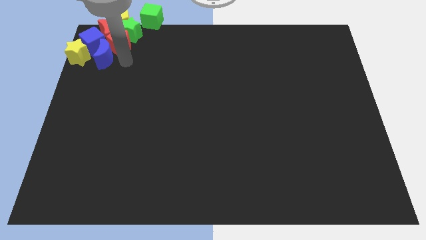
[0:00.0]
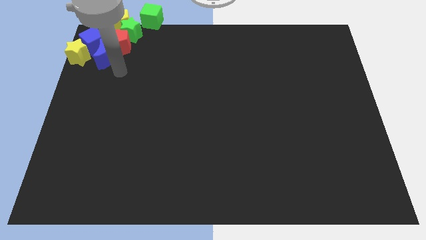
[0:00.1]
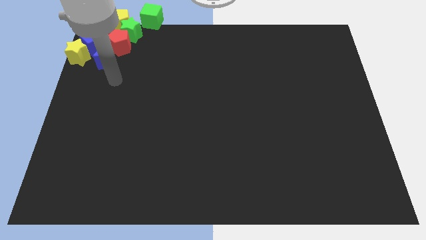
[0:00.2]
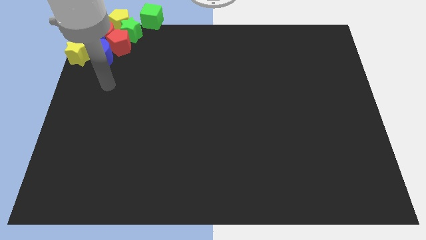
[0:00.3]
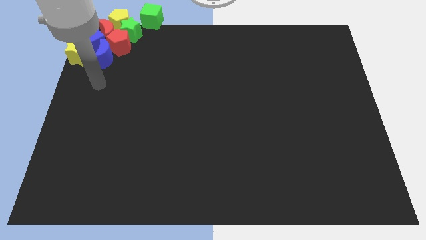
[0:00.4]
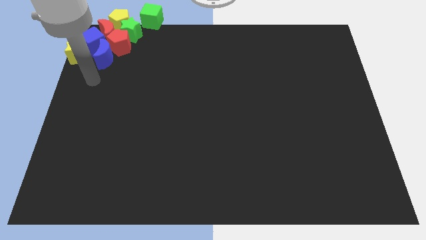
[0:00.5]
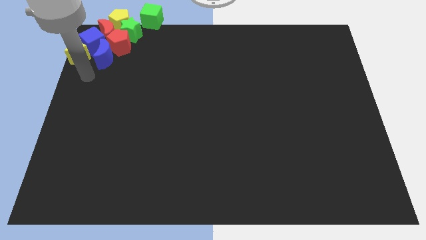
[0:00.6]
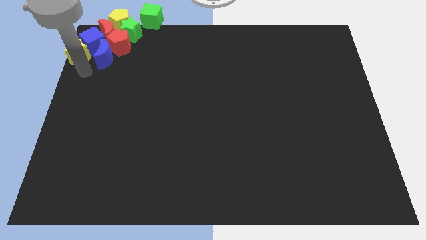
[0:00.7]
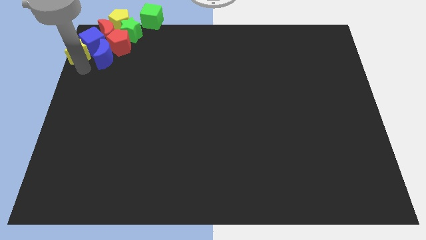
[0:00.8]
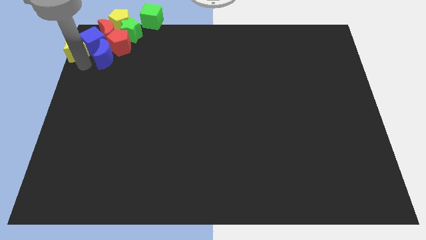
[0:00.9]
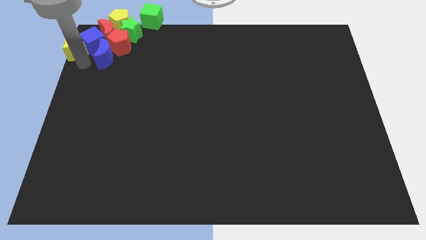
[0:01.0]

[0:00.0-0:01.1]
touch the bottom side of the yellow star

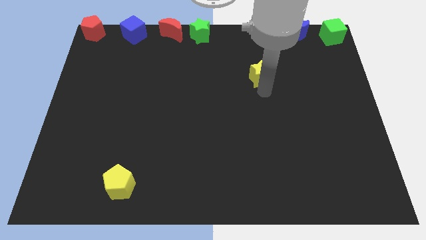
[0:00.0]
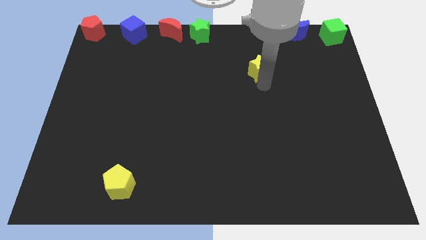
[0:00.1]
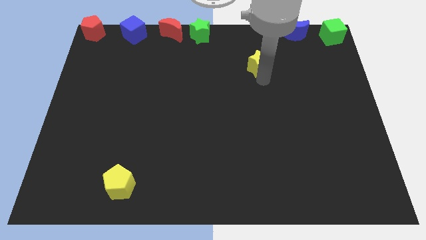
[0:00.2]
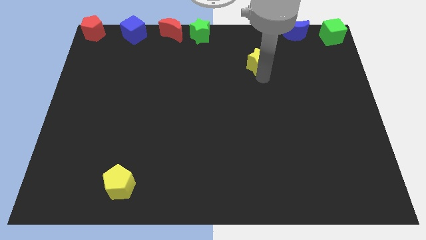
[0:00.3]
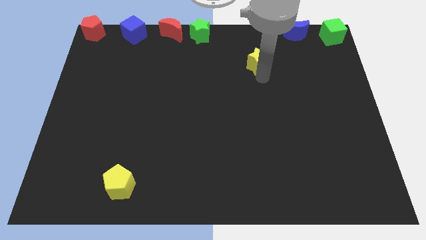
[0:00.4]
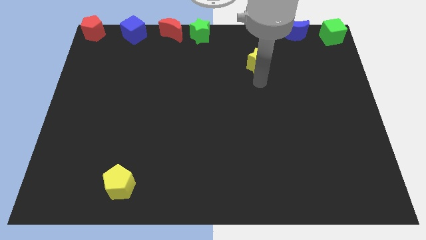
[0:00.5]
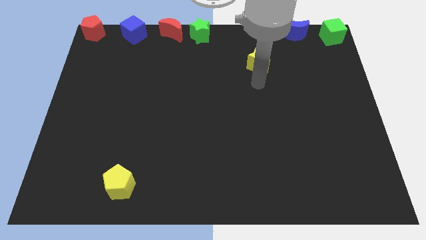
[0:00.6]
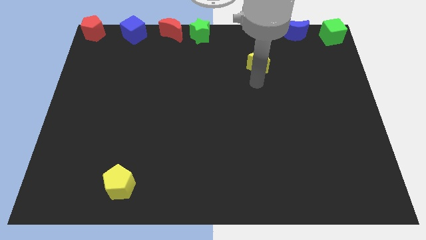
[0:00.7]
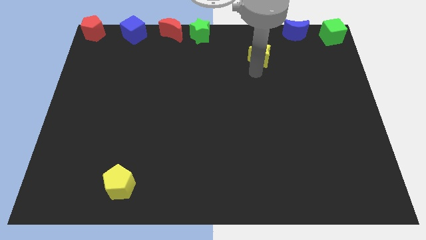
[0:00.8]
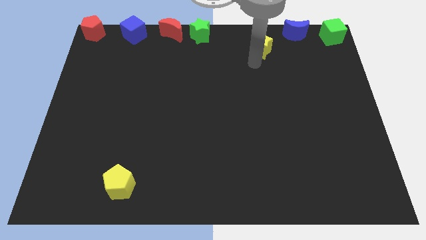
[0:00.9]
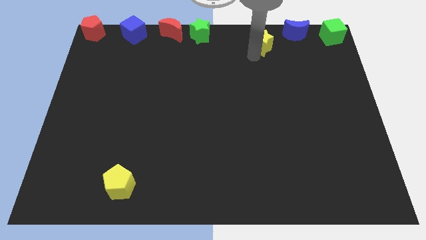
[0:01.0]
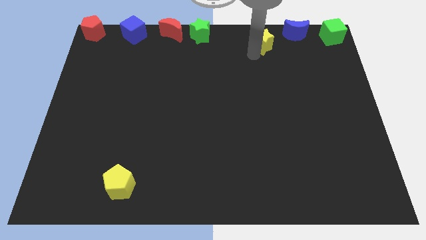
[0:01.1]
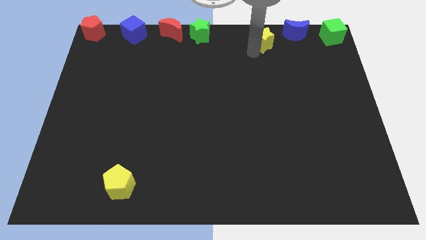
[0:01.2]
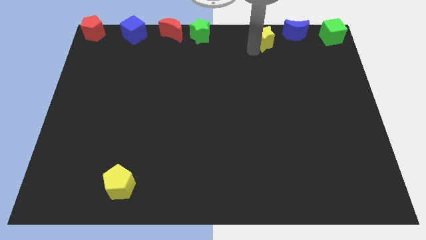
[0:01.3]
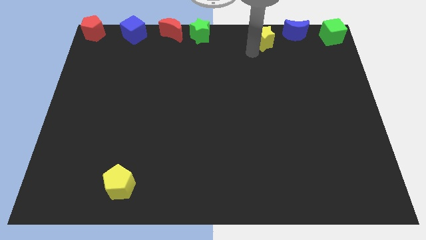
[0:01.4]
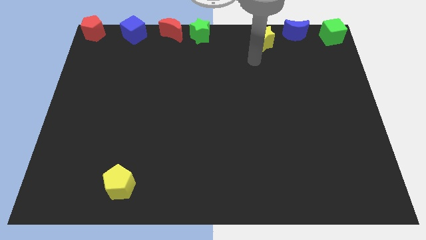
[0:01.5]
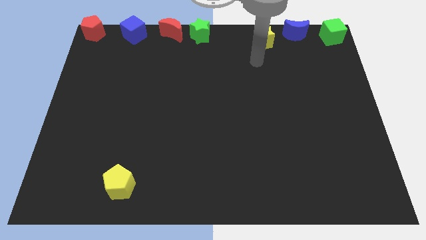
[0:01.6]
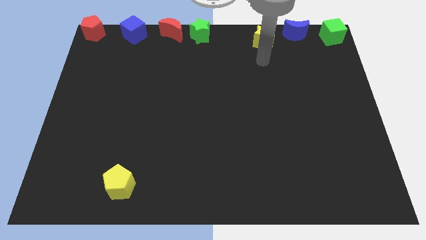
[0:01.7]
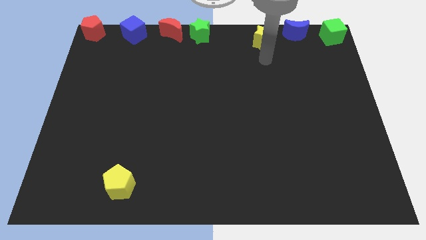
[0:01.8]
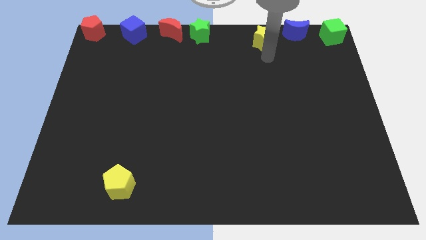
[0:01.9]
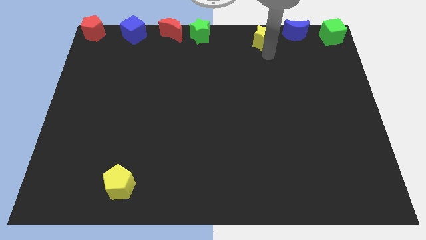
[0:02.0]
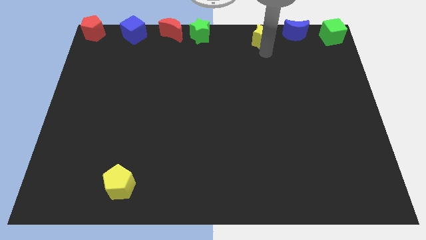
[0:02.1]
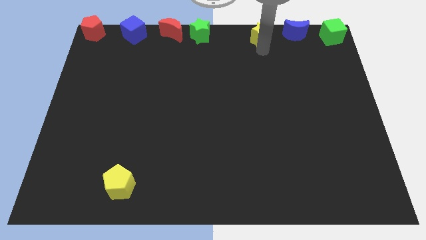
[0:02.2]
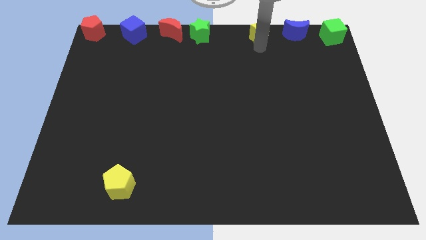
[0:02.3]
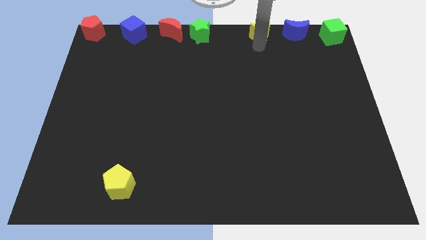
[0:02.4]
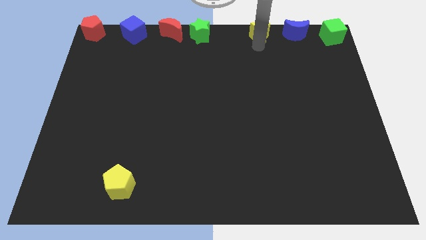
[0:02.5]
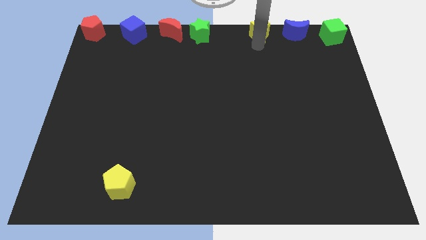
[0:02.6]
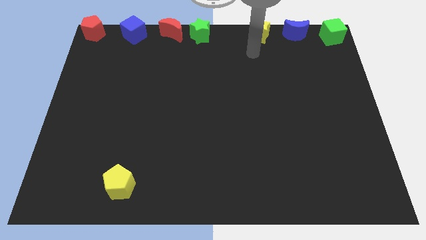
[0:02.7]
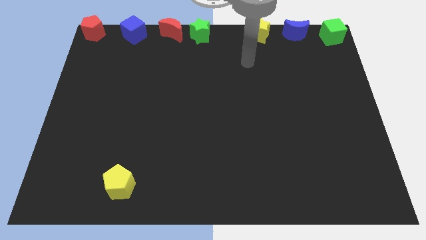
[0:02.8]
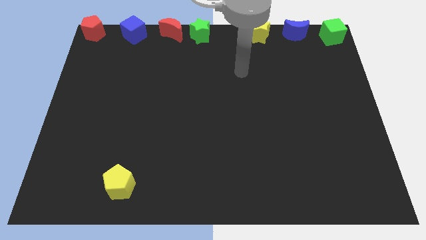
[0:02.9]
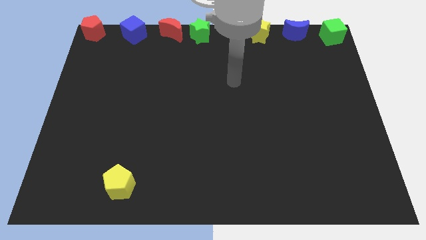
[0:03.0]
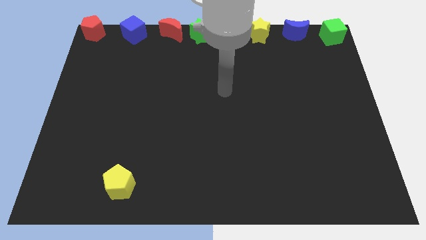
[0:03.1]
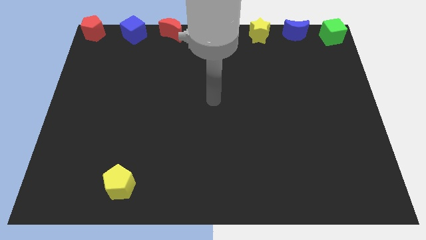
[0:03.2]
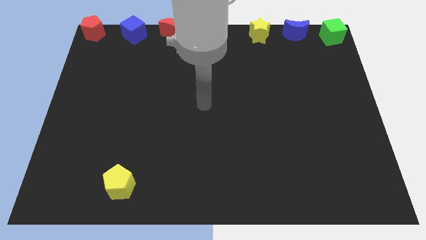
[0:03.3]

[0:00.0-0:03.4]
place the yellow star to the left side of the blue moon

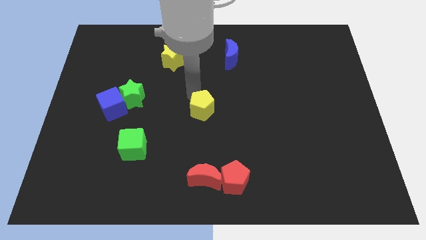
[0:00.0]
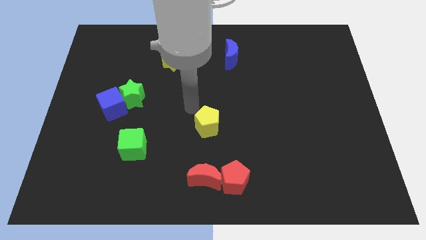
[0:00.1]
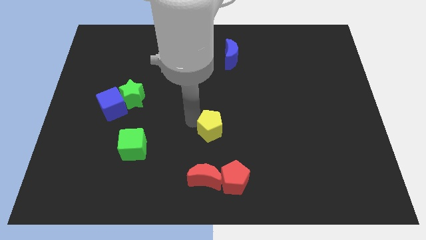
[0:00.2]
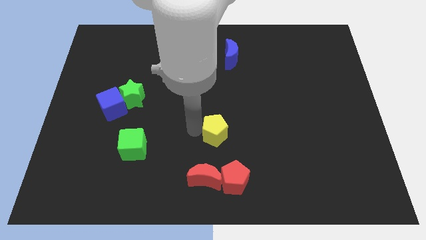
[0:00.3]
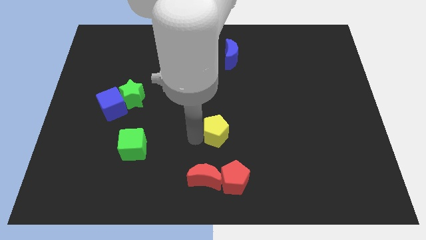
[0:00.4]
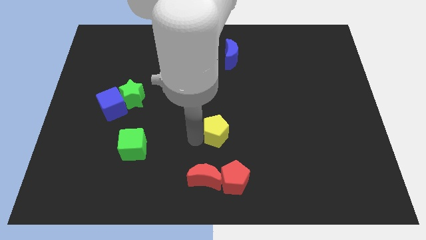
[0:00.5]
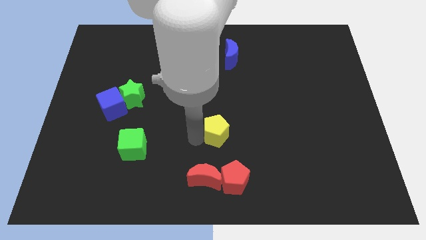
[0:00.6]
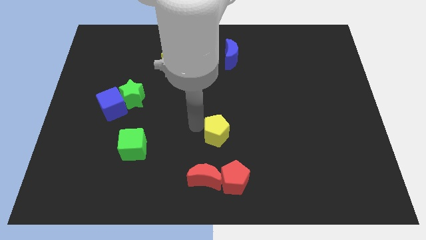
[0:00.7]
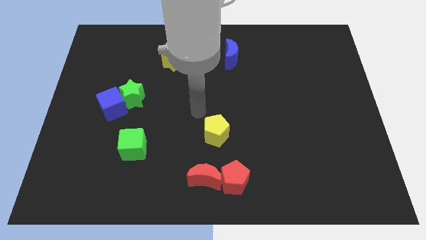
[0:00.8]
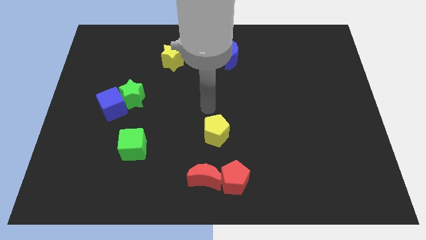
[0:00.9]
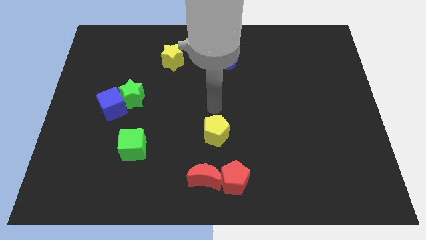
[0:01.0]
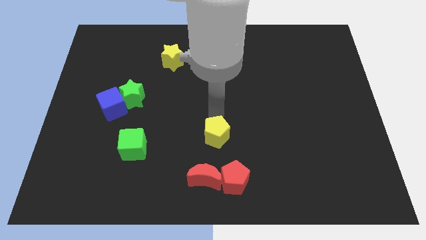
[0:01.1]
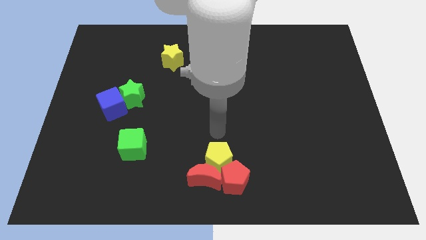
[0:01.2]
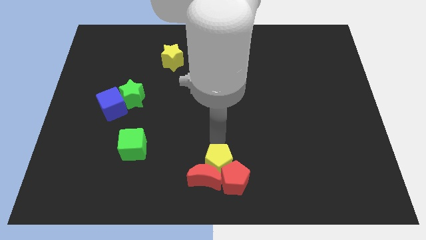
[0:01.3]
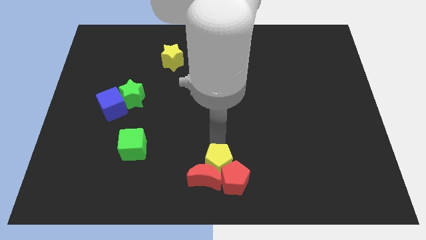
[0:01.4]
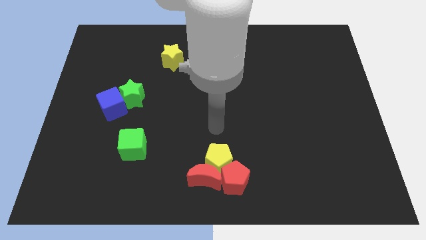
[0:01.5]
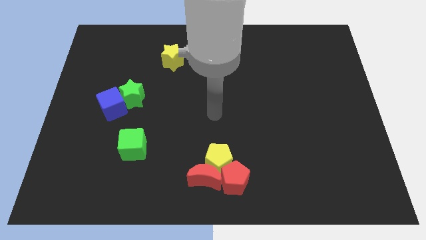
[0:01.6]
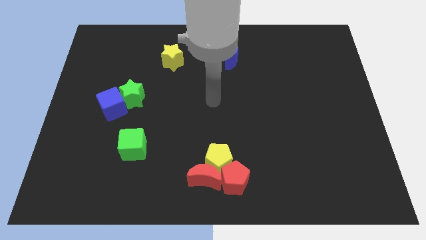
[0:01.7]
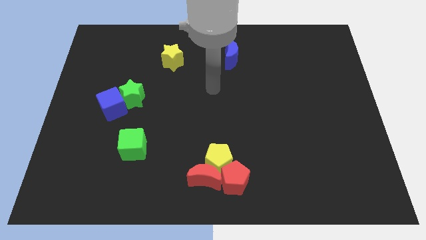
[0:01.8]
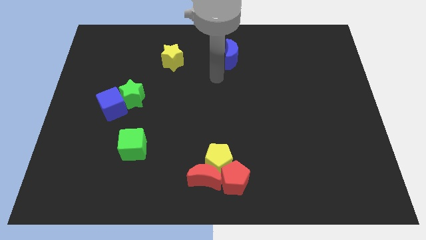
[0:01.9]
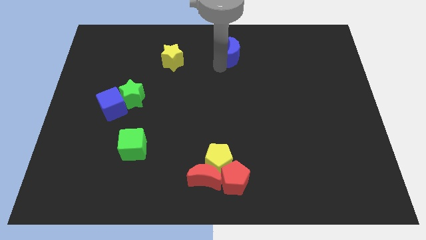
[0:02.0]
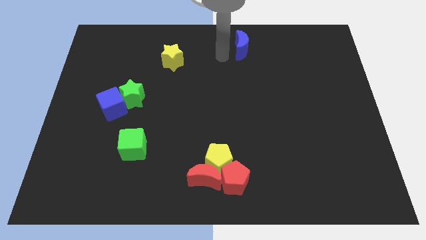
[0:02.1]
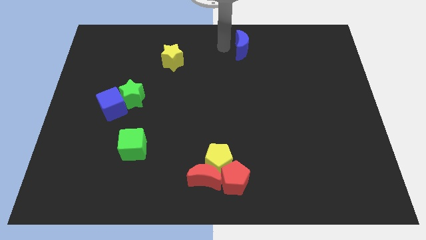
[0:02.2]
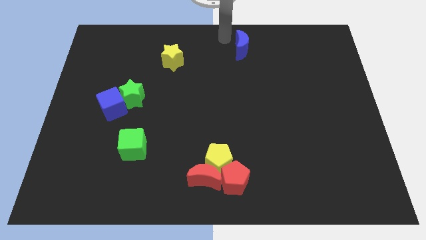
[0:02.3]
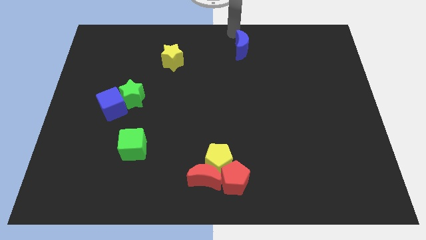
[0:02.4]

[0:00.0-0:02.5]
move yellow pentagon left above the red pentagon

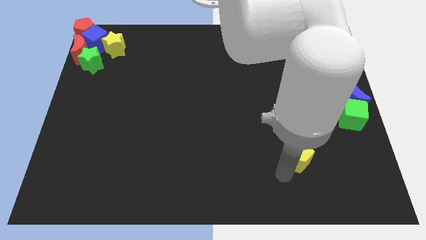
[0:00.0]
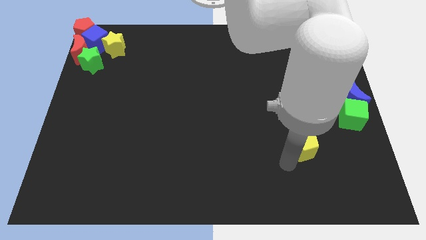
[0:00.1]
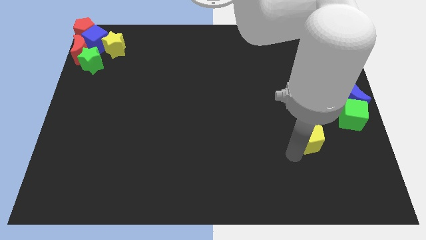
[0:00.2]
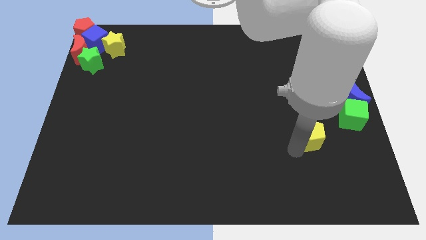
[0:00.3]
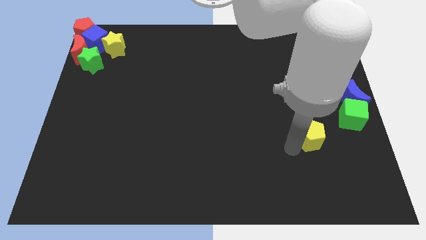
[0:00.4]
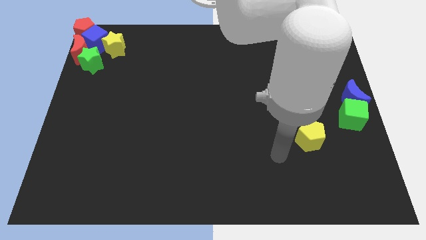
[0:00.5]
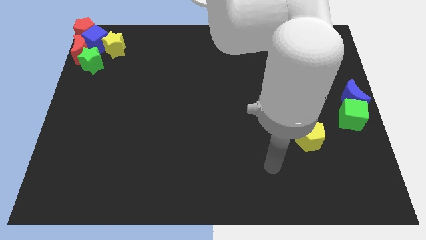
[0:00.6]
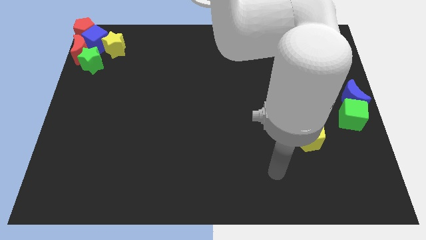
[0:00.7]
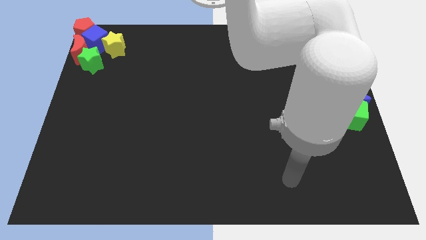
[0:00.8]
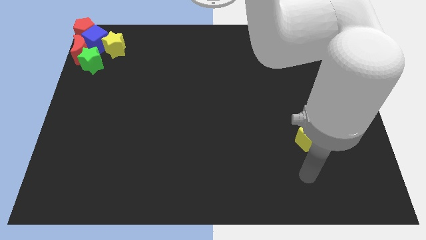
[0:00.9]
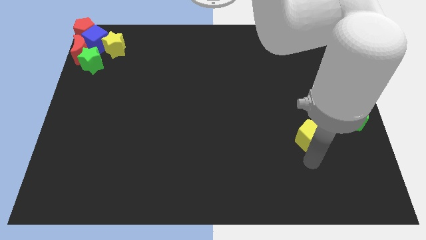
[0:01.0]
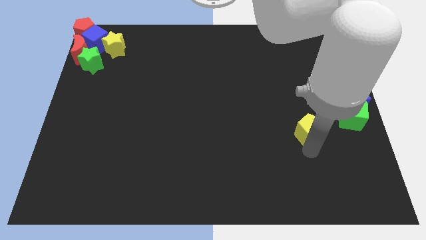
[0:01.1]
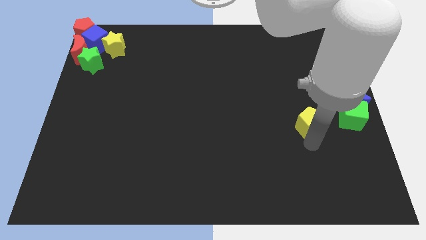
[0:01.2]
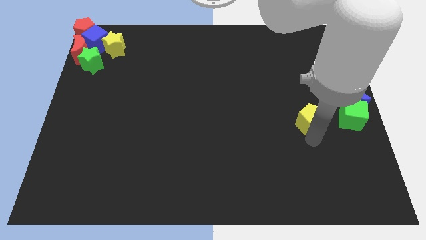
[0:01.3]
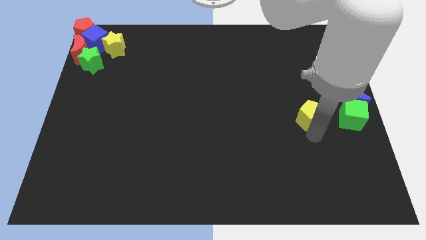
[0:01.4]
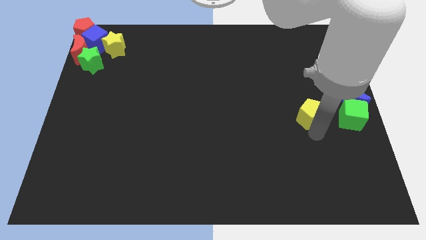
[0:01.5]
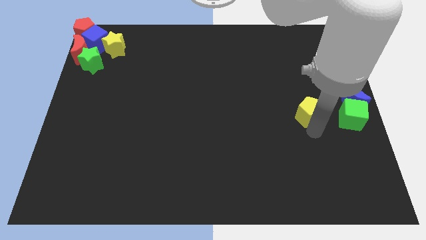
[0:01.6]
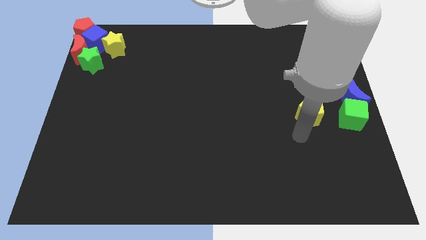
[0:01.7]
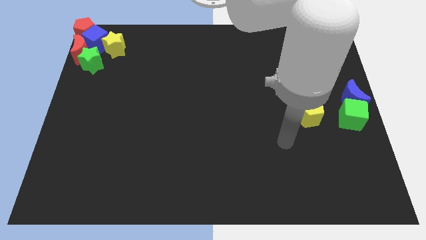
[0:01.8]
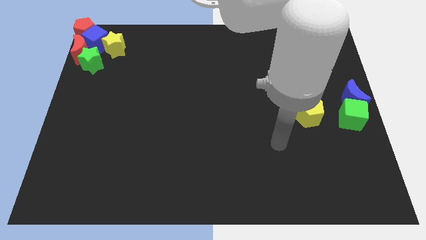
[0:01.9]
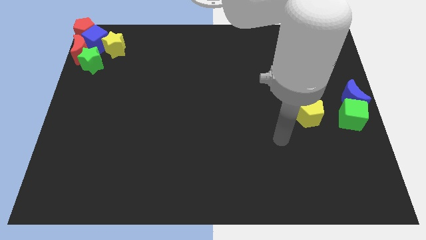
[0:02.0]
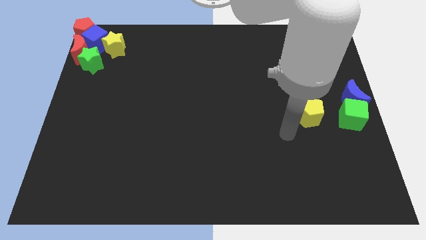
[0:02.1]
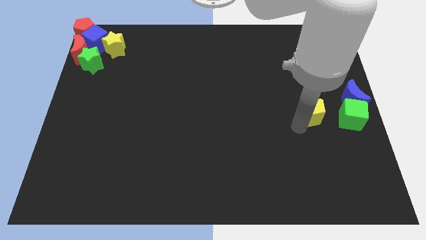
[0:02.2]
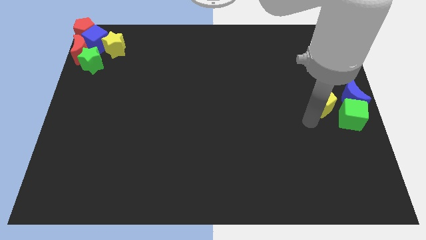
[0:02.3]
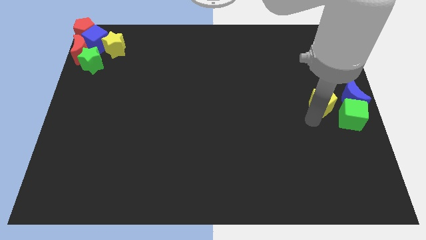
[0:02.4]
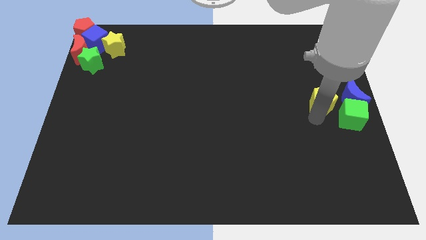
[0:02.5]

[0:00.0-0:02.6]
move the yellow pentagon left to the blue crescent
